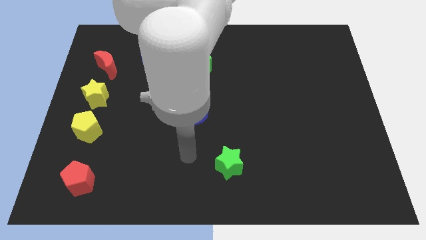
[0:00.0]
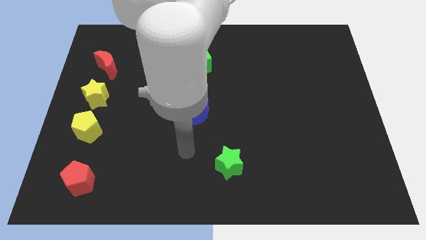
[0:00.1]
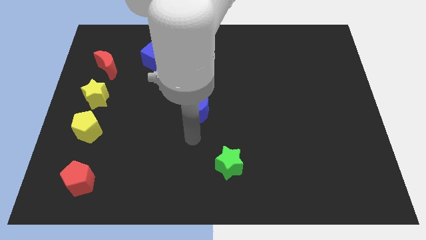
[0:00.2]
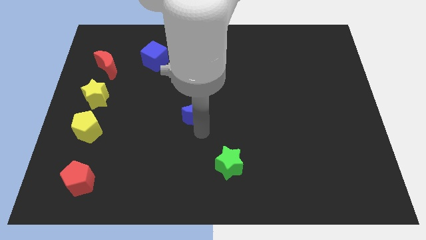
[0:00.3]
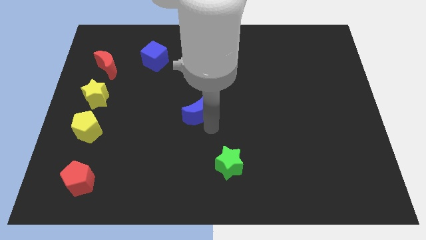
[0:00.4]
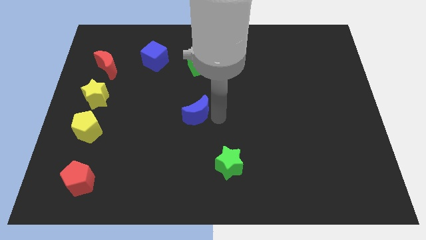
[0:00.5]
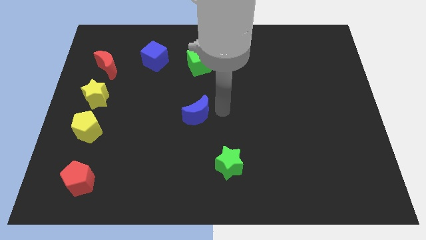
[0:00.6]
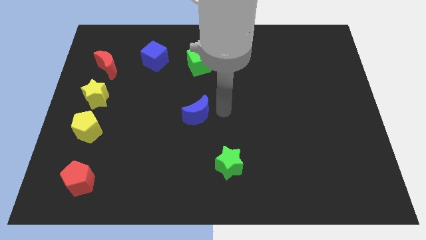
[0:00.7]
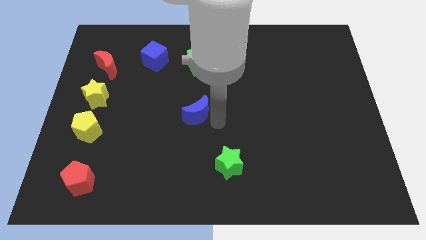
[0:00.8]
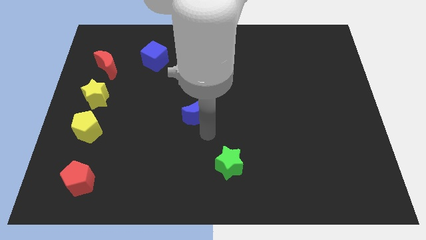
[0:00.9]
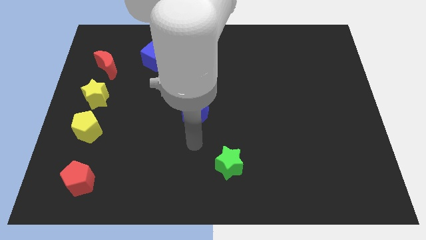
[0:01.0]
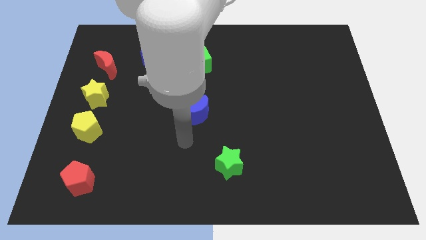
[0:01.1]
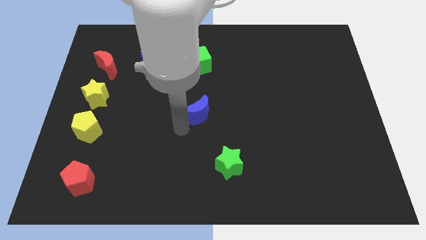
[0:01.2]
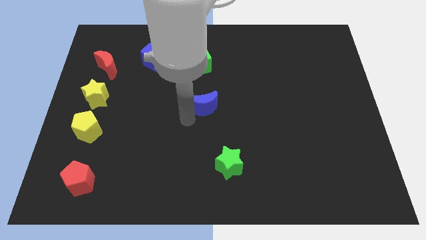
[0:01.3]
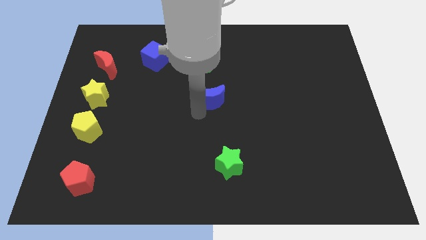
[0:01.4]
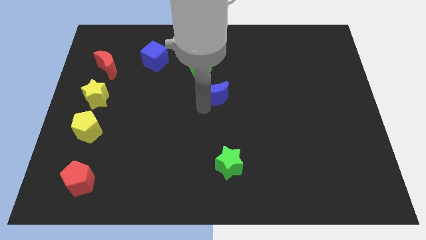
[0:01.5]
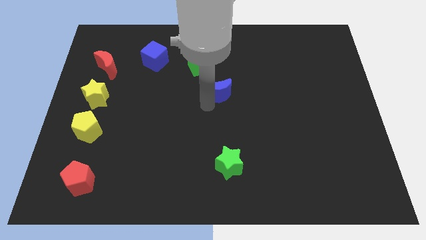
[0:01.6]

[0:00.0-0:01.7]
place the blue moon parallel to yellow star

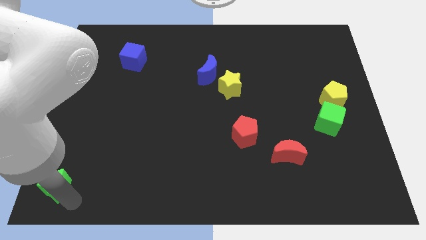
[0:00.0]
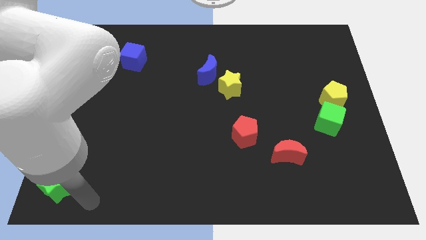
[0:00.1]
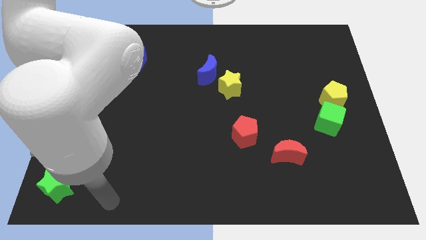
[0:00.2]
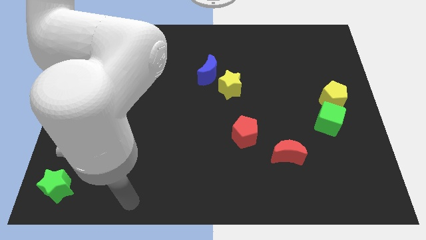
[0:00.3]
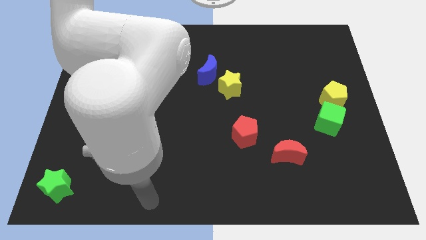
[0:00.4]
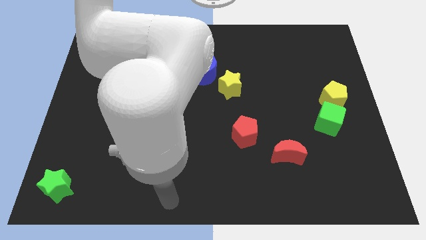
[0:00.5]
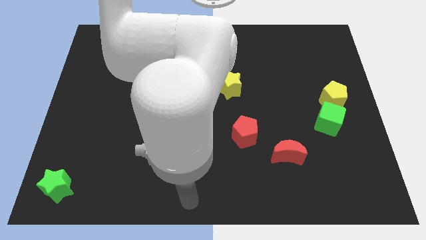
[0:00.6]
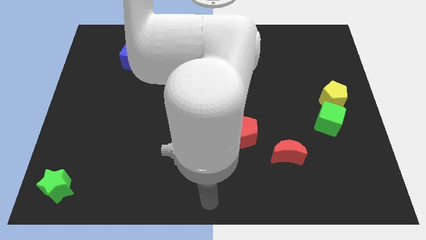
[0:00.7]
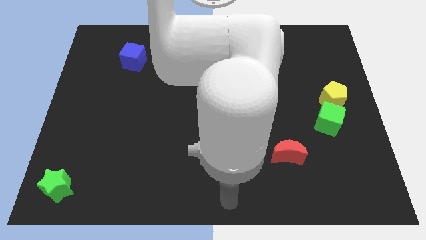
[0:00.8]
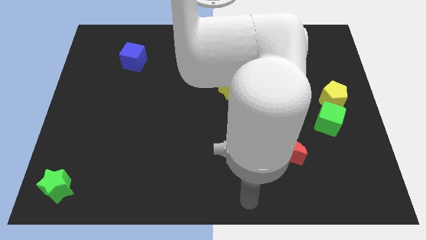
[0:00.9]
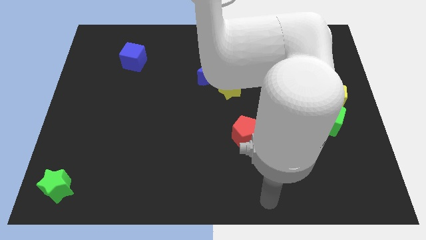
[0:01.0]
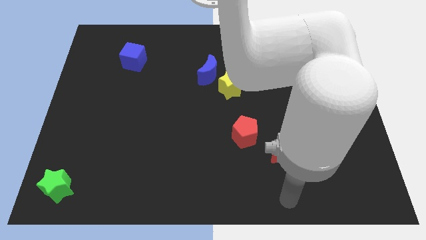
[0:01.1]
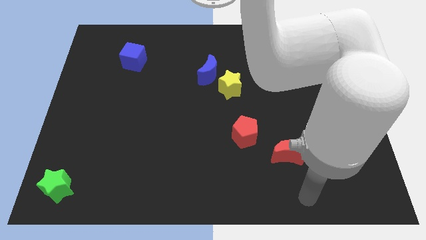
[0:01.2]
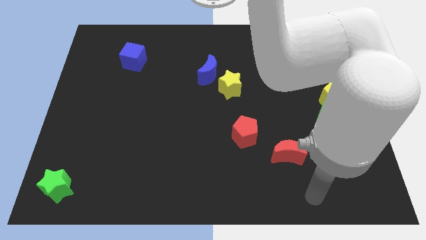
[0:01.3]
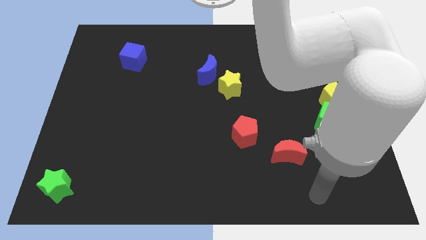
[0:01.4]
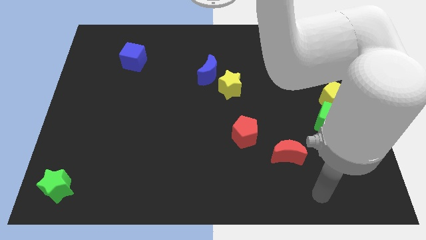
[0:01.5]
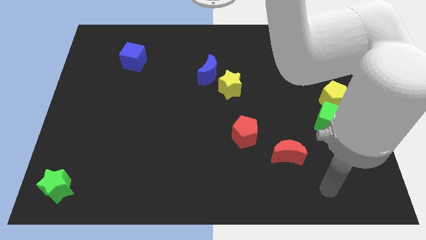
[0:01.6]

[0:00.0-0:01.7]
move your hand to the bottom right side of the table

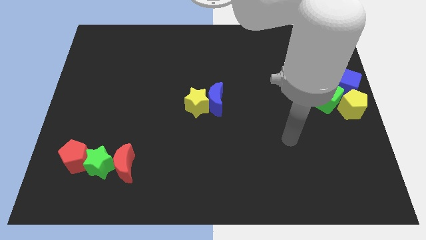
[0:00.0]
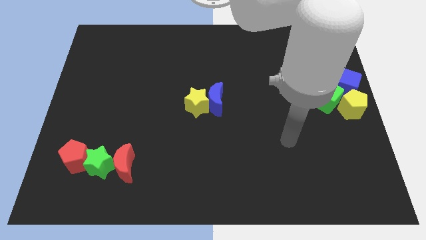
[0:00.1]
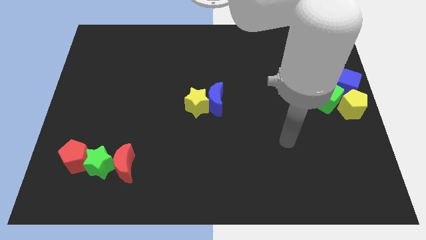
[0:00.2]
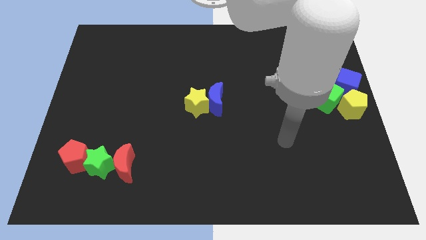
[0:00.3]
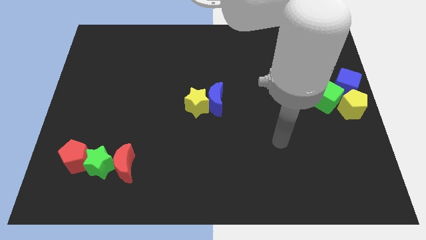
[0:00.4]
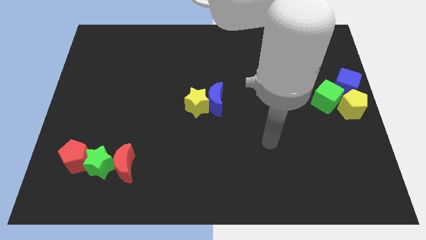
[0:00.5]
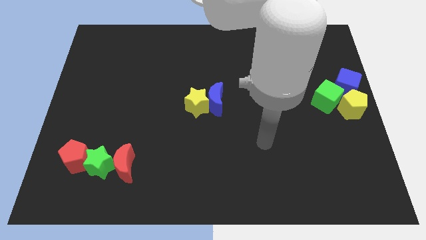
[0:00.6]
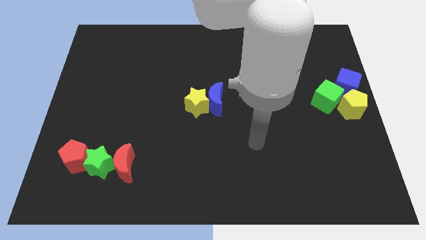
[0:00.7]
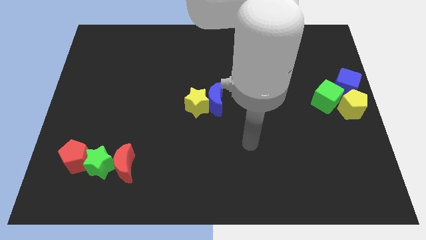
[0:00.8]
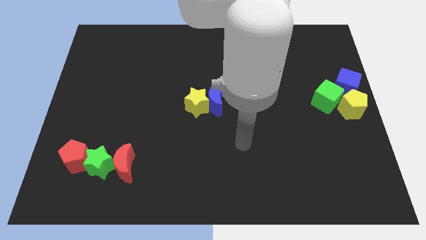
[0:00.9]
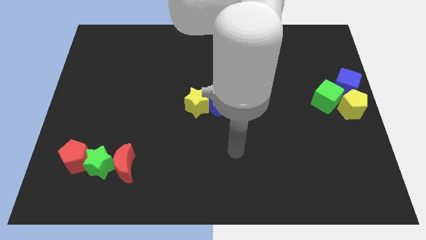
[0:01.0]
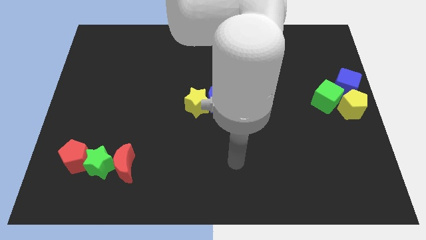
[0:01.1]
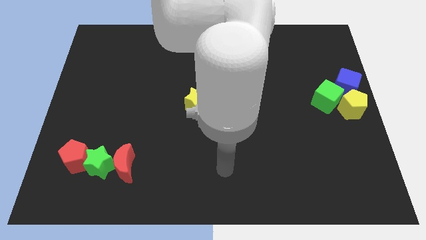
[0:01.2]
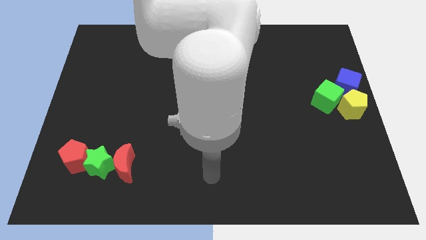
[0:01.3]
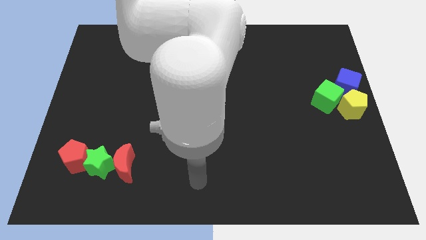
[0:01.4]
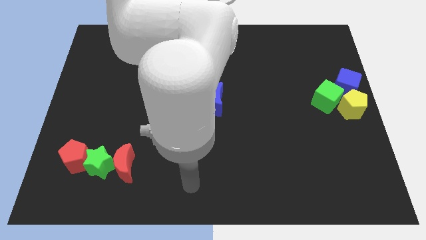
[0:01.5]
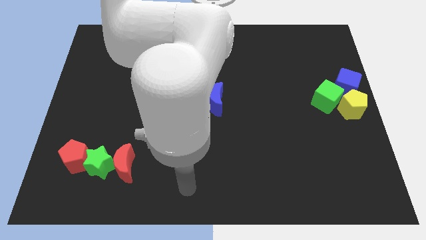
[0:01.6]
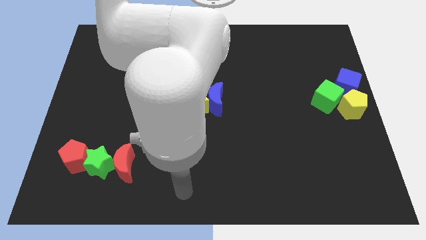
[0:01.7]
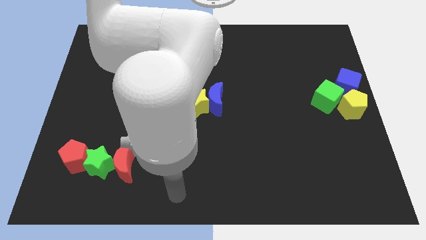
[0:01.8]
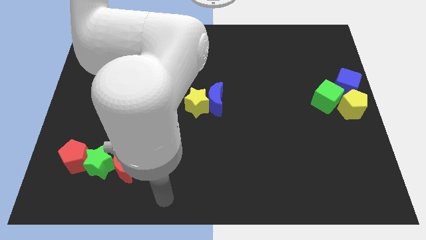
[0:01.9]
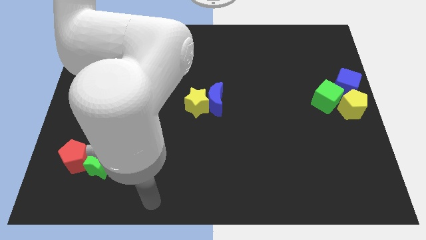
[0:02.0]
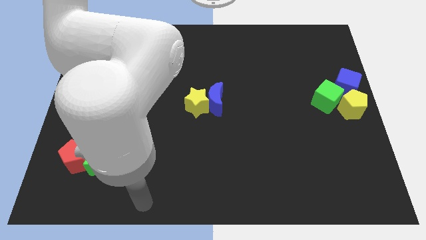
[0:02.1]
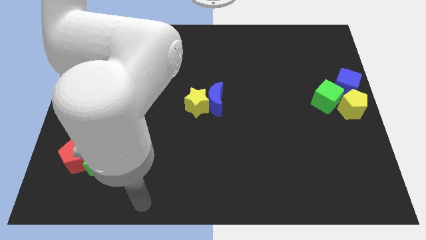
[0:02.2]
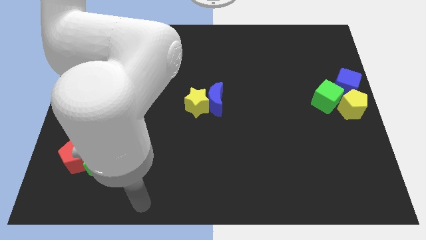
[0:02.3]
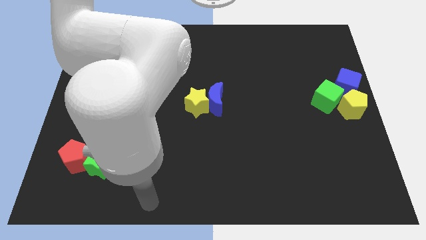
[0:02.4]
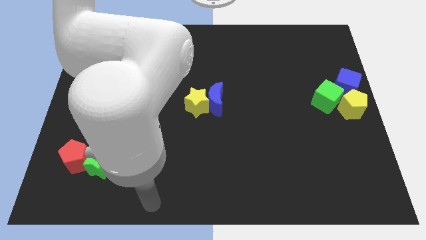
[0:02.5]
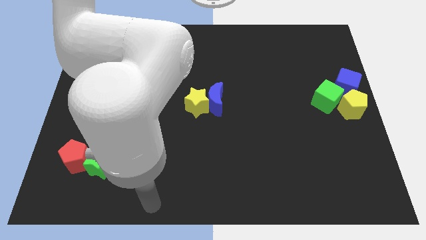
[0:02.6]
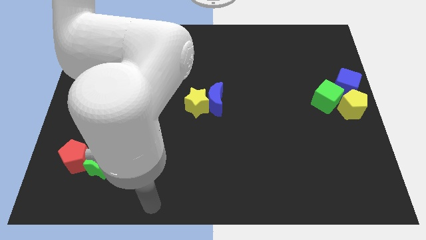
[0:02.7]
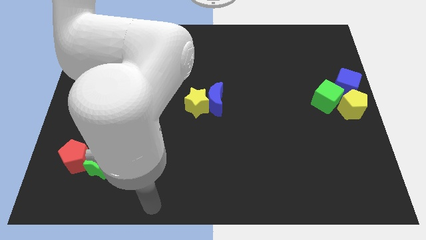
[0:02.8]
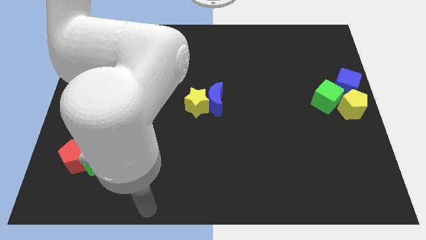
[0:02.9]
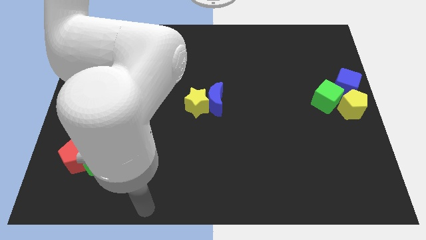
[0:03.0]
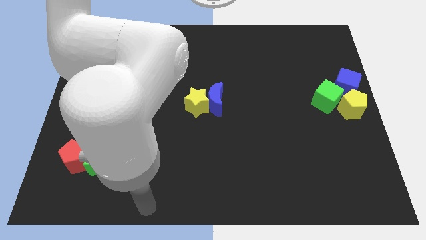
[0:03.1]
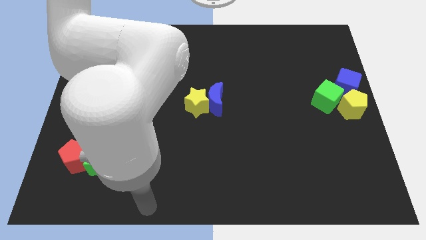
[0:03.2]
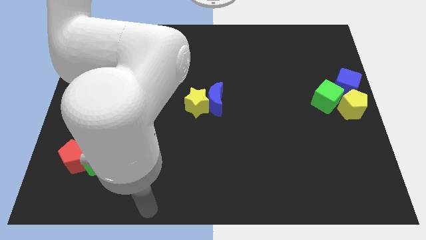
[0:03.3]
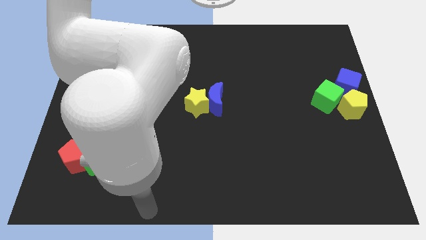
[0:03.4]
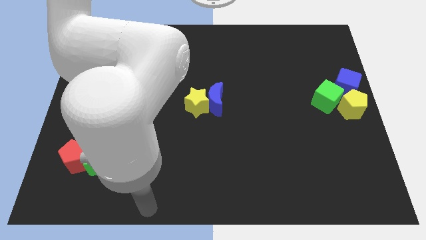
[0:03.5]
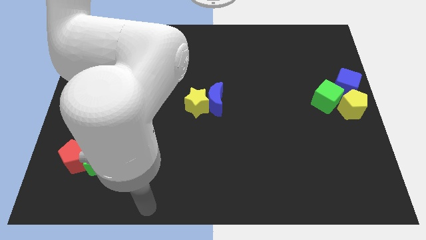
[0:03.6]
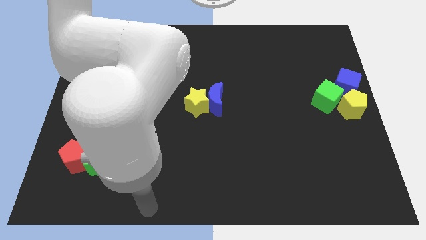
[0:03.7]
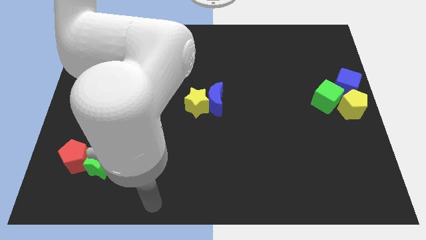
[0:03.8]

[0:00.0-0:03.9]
move your arm to the bottom right of red crescent

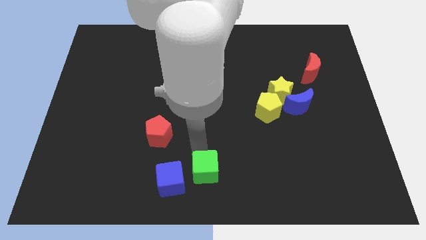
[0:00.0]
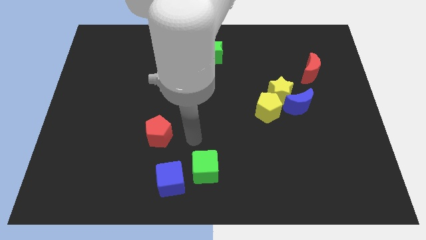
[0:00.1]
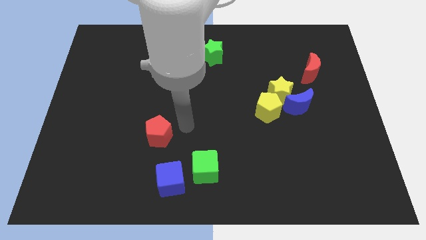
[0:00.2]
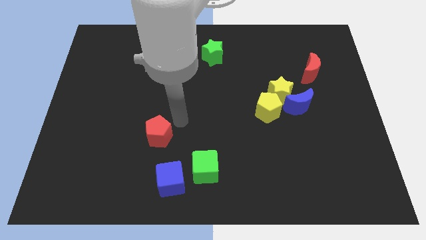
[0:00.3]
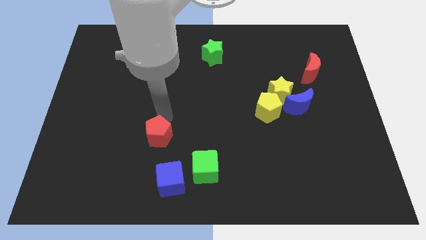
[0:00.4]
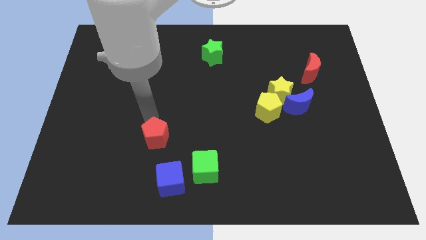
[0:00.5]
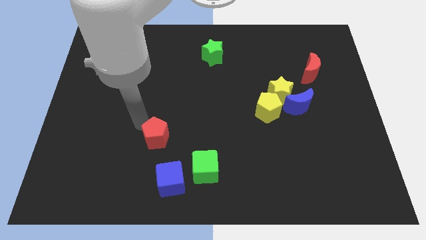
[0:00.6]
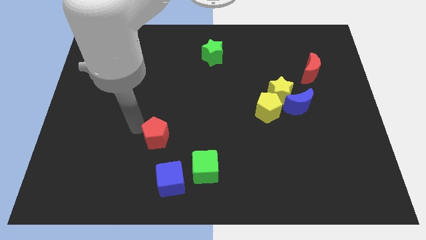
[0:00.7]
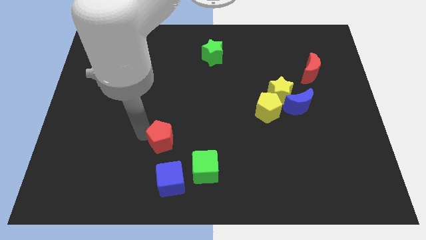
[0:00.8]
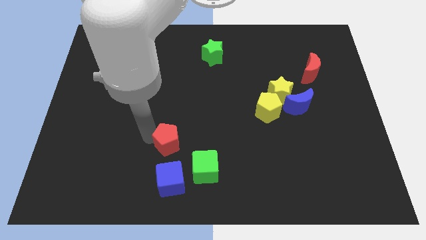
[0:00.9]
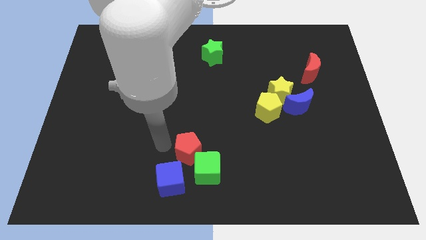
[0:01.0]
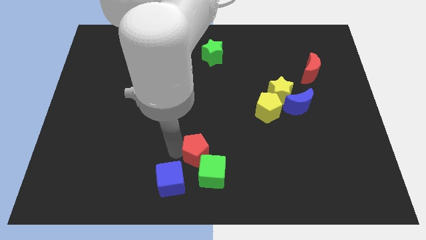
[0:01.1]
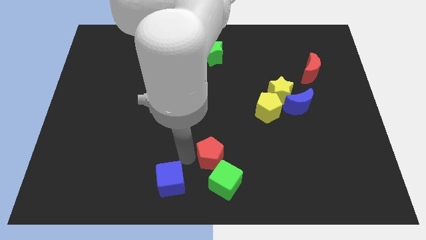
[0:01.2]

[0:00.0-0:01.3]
push the red pentagon into the green cube

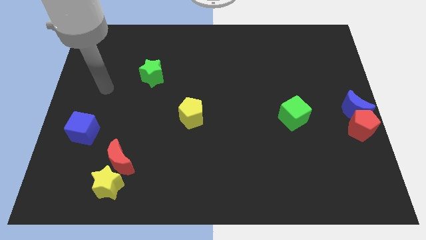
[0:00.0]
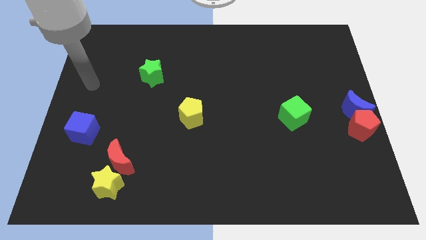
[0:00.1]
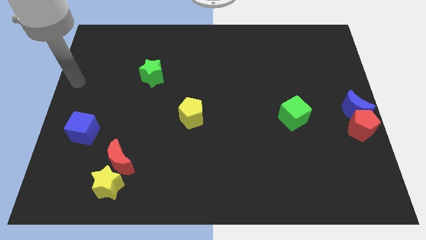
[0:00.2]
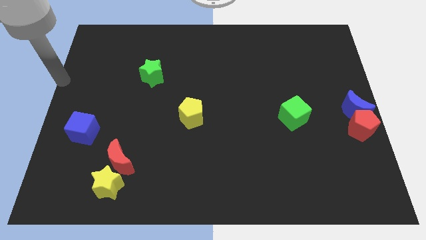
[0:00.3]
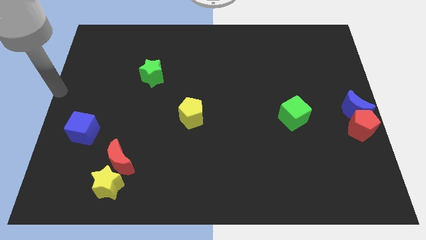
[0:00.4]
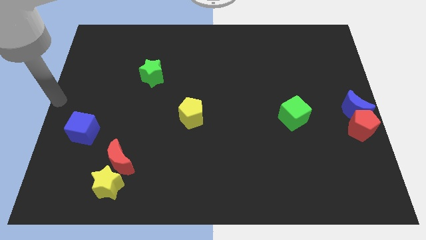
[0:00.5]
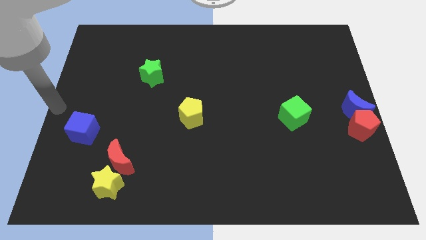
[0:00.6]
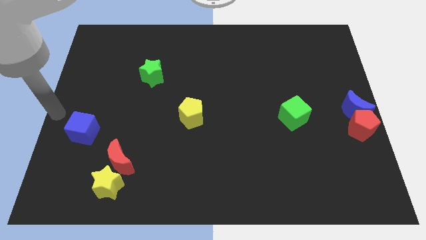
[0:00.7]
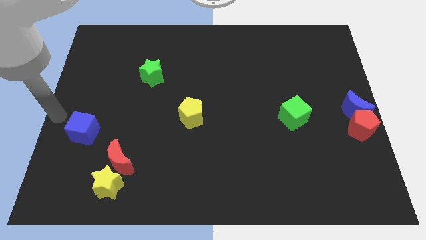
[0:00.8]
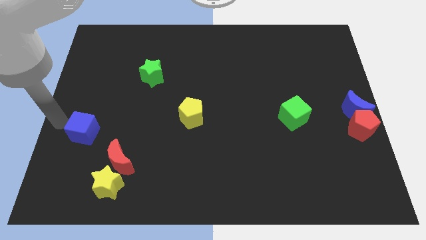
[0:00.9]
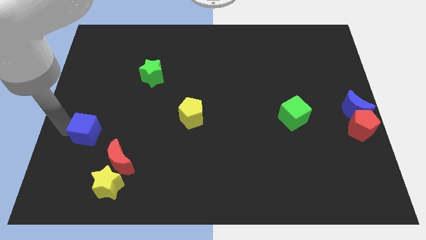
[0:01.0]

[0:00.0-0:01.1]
tap the blue square
